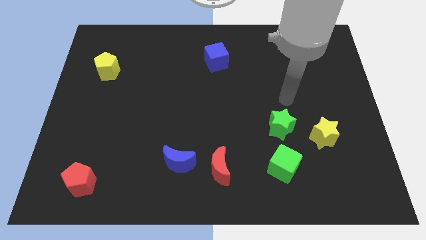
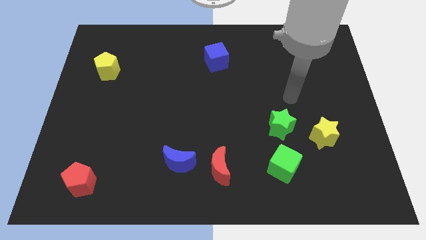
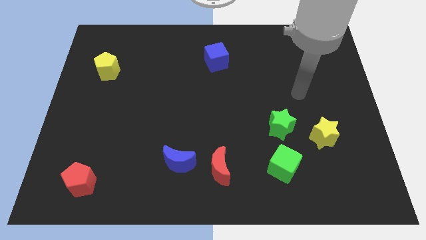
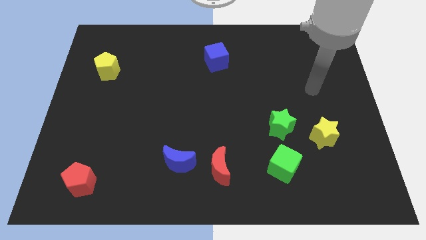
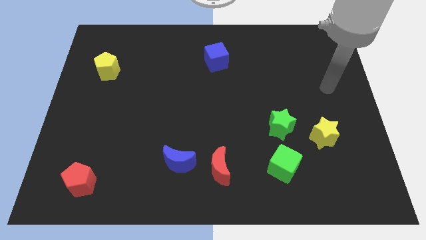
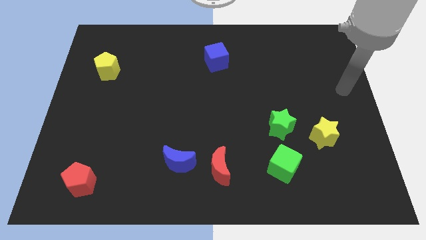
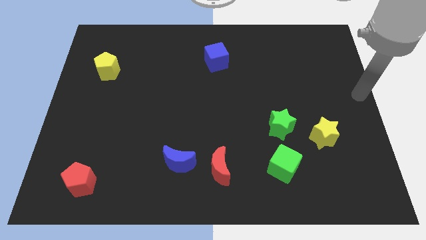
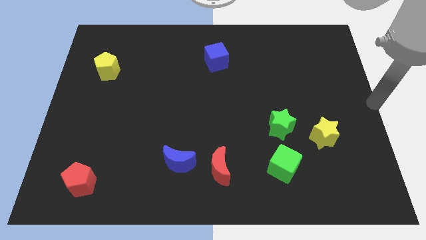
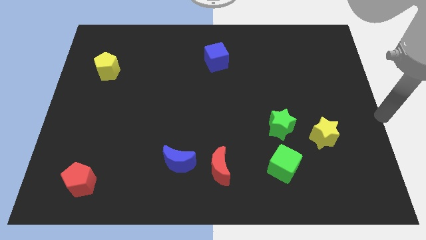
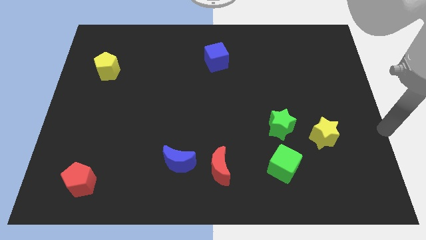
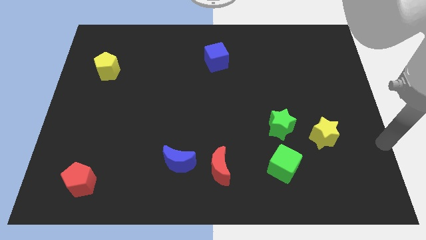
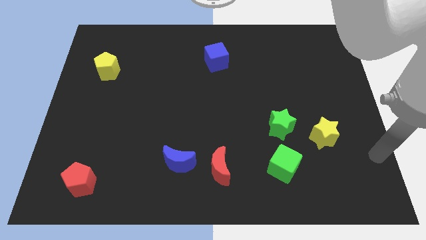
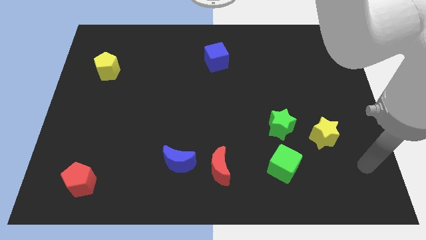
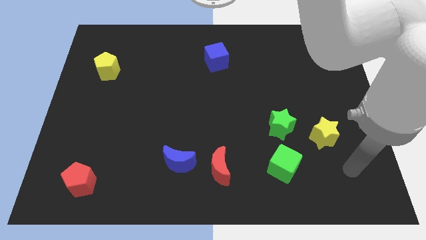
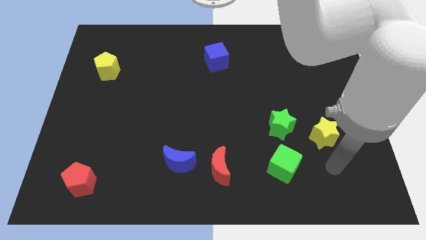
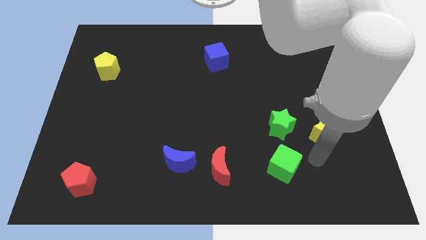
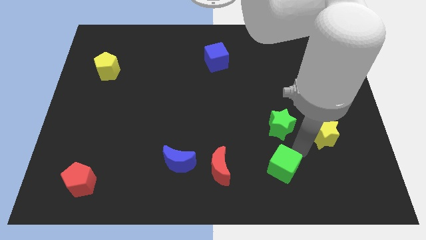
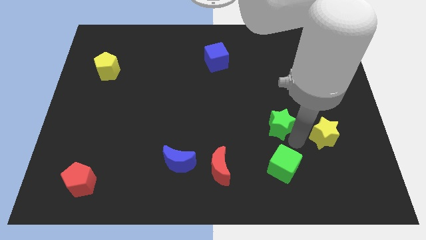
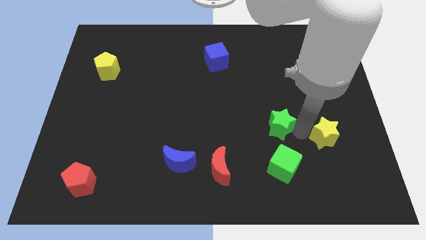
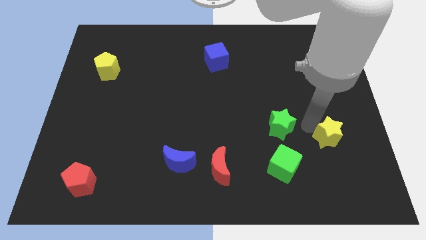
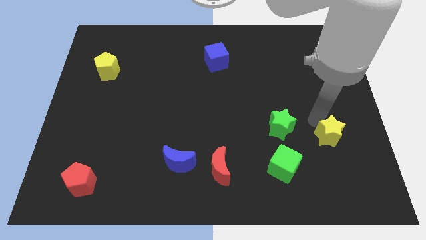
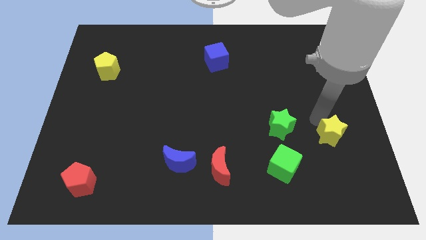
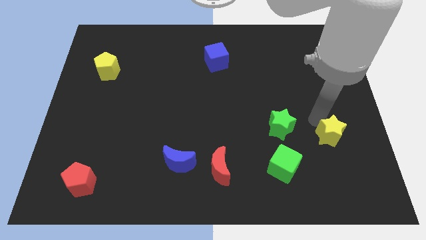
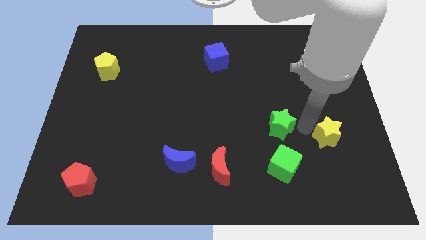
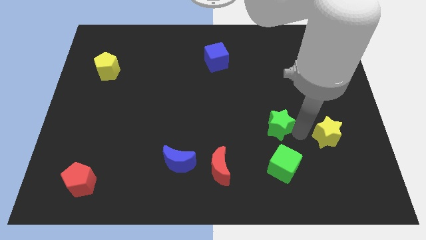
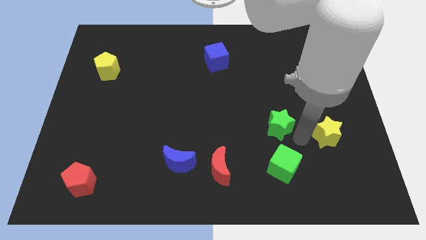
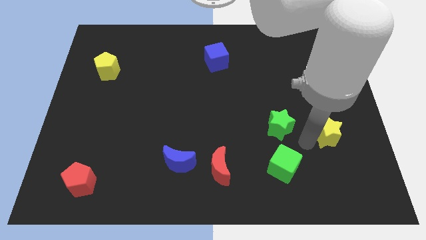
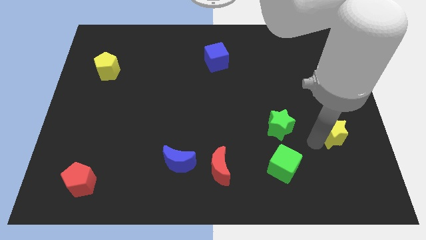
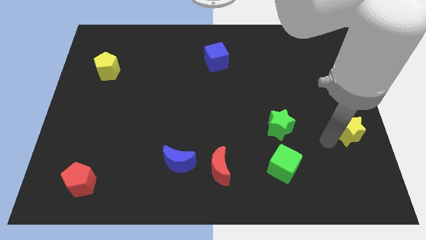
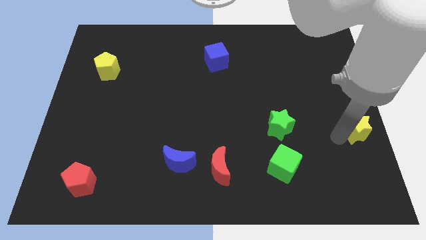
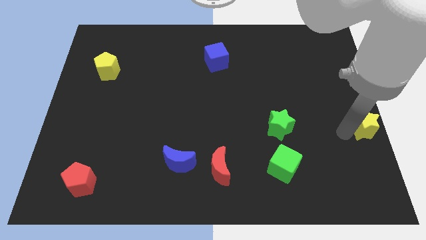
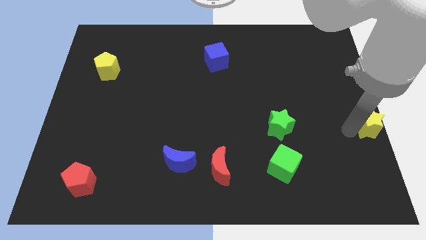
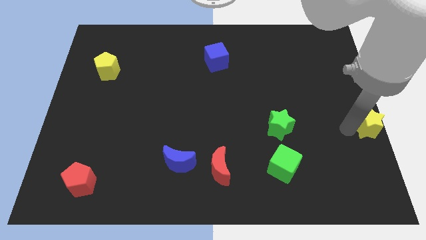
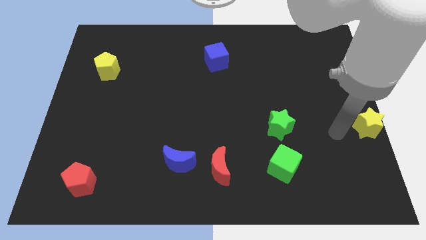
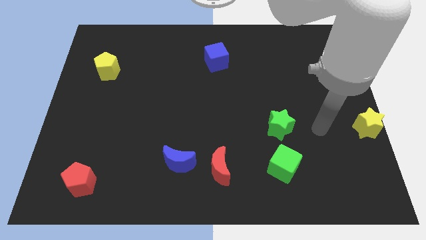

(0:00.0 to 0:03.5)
slide the yellow star to the right

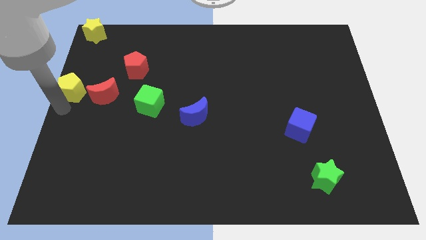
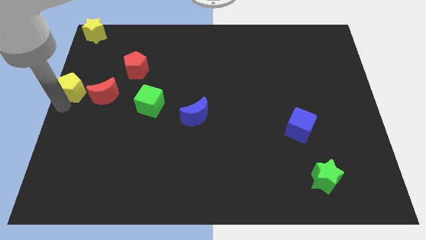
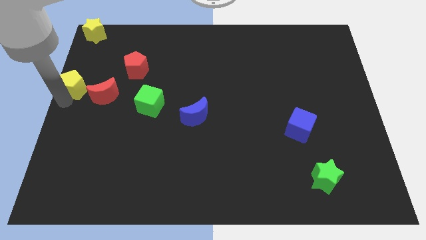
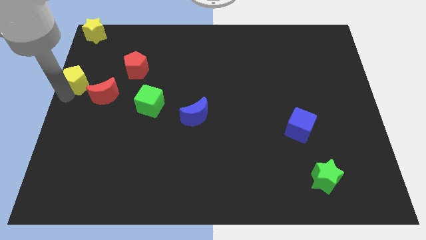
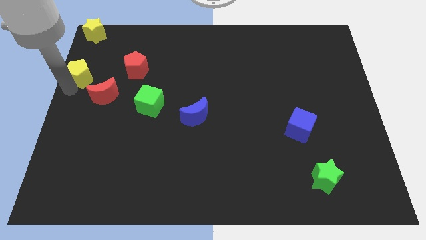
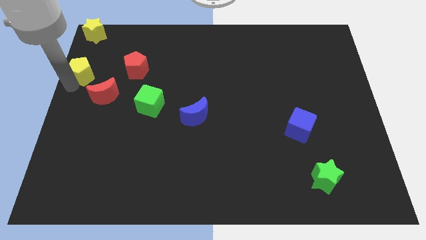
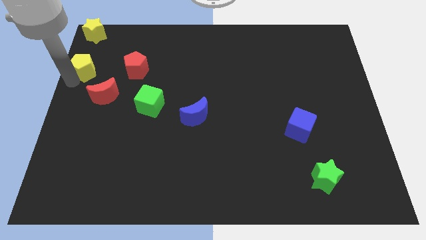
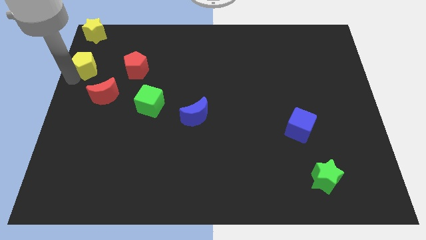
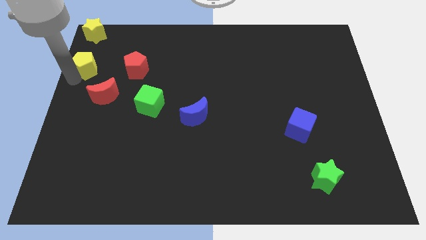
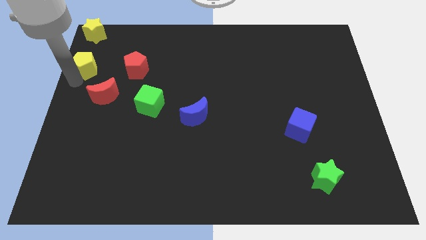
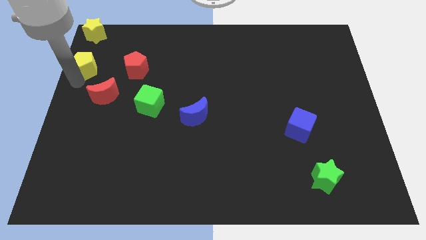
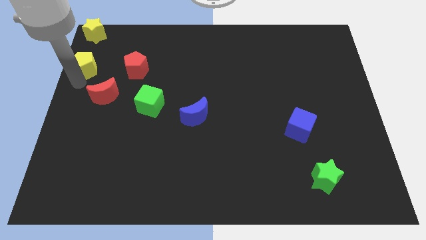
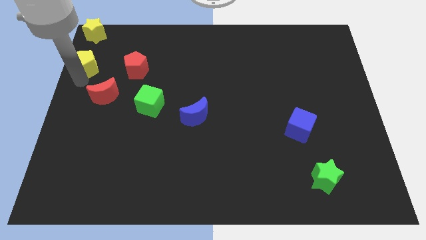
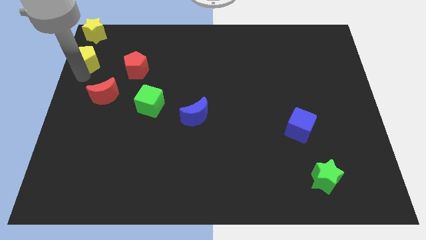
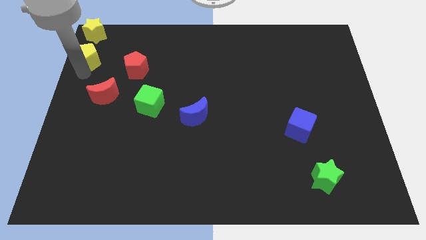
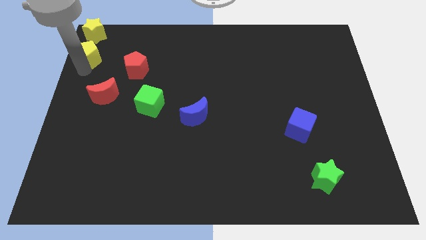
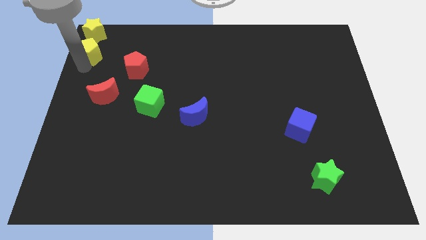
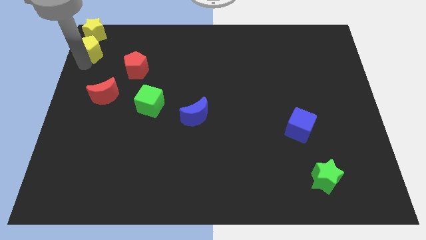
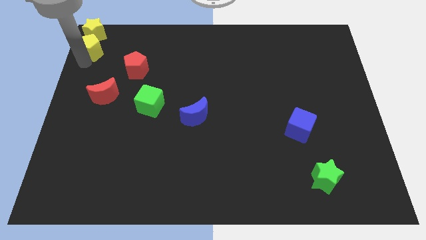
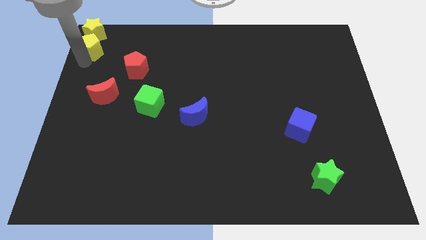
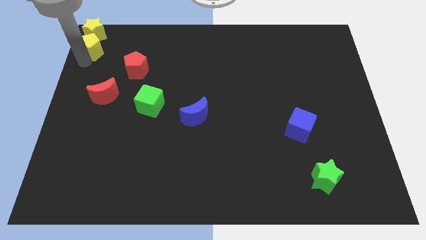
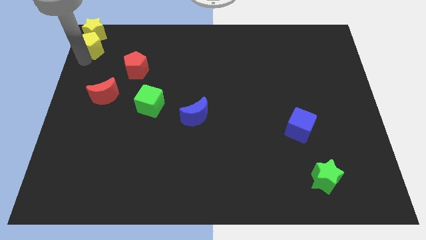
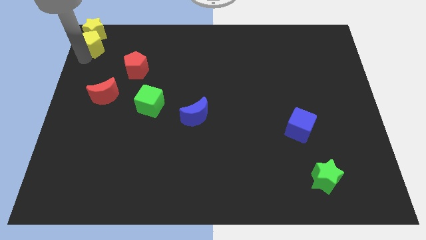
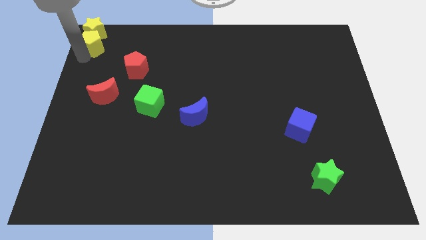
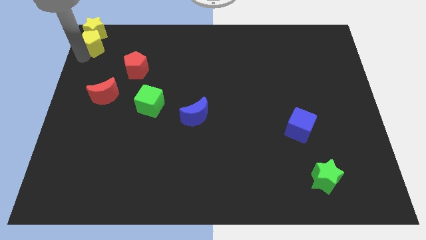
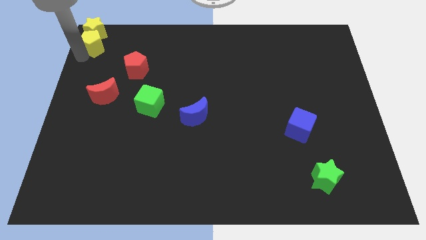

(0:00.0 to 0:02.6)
place the yellow pentagon under yellow star

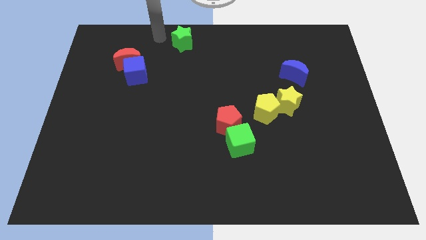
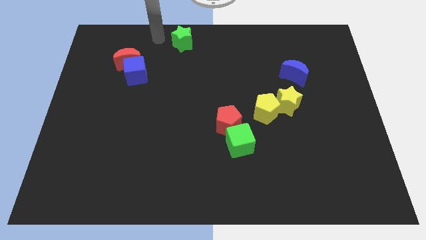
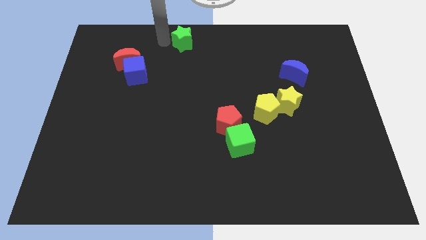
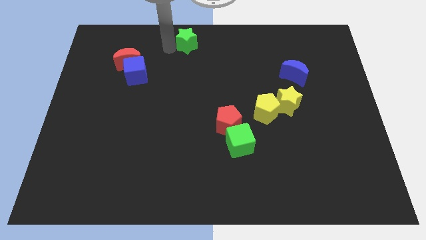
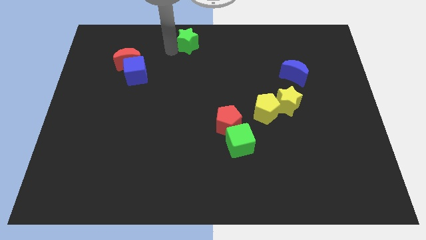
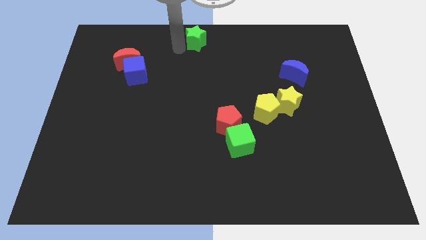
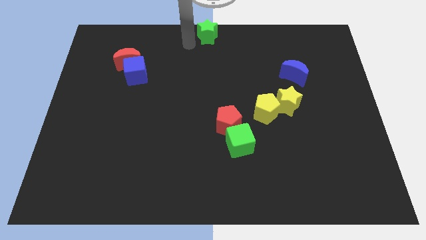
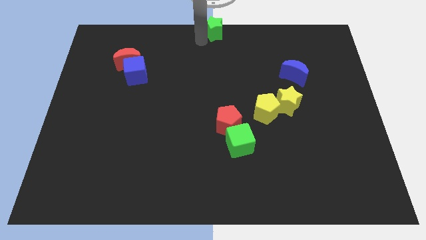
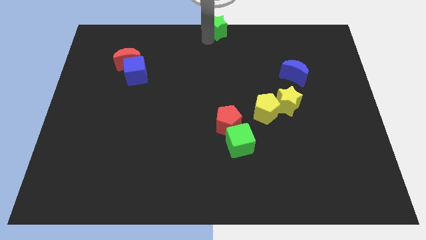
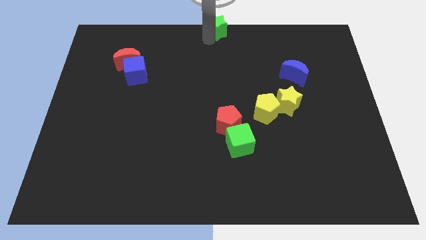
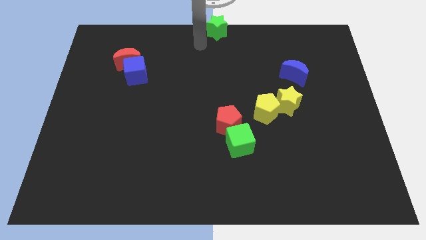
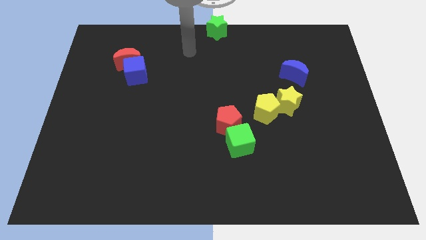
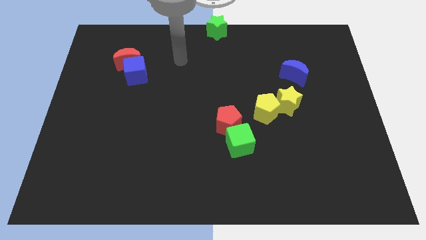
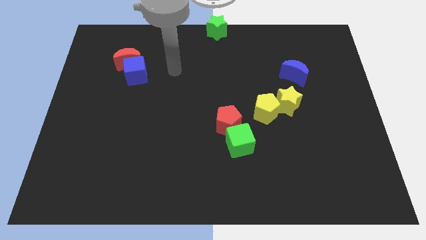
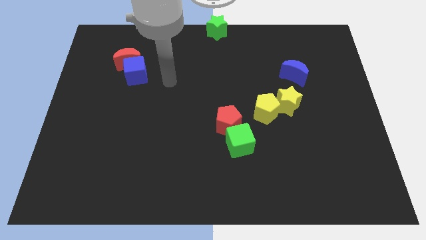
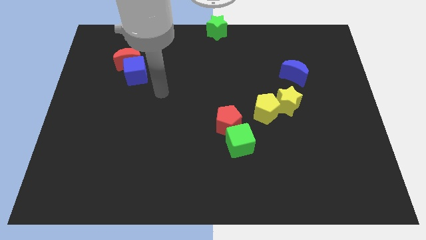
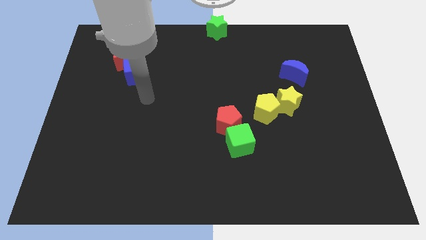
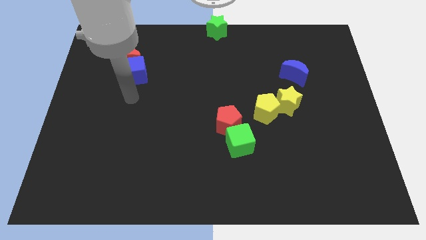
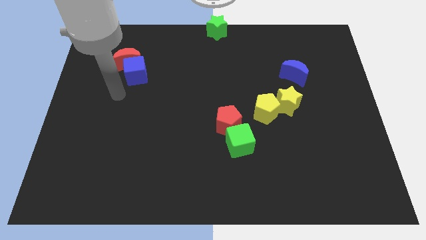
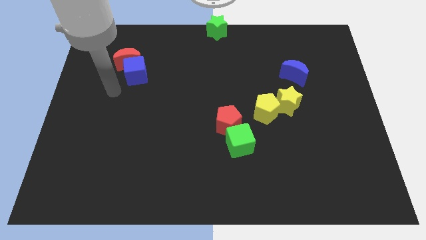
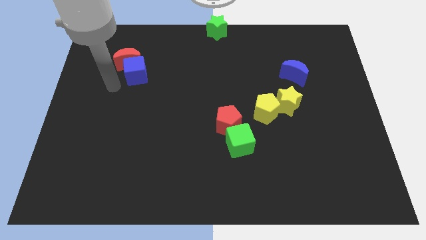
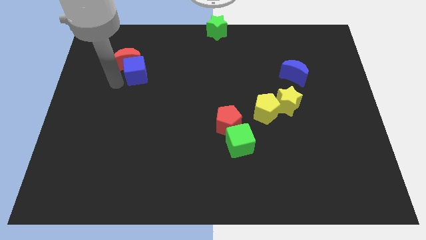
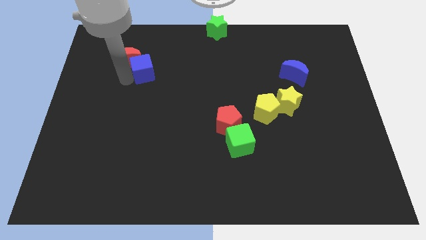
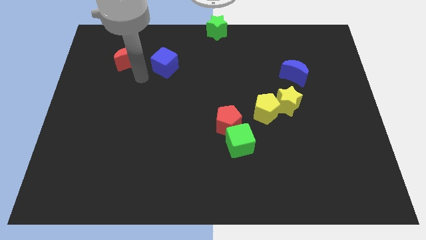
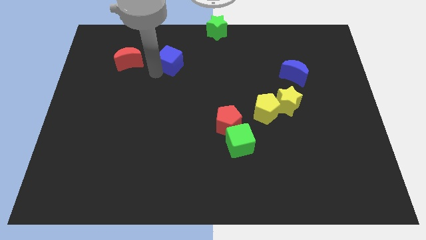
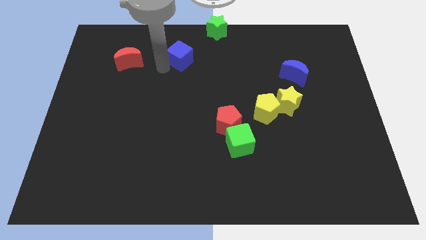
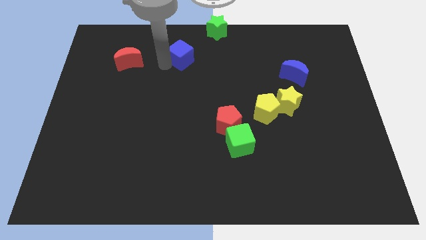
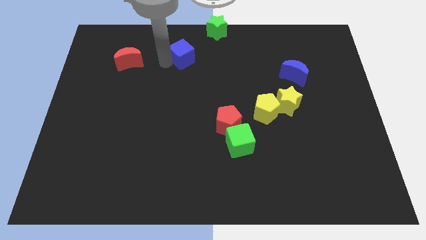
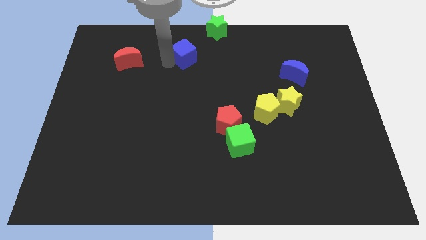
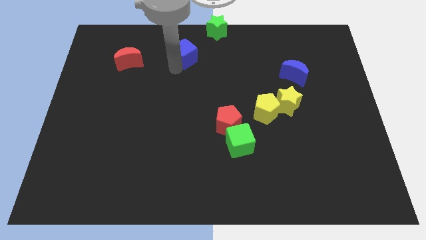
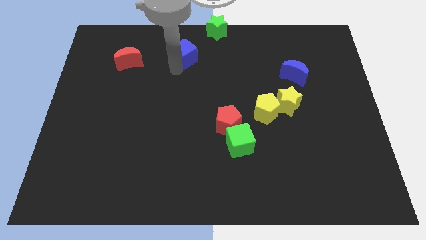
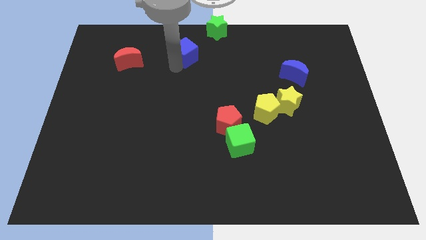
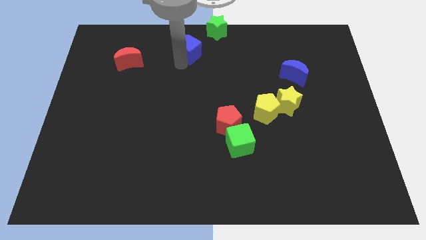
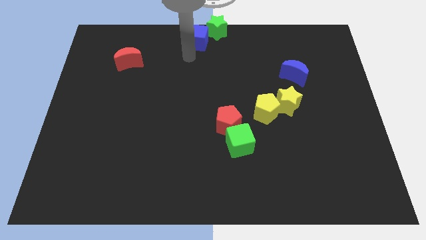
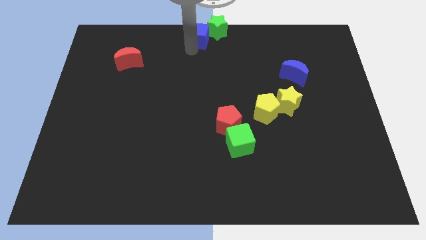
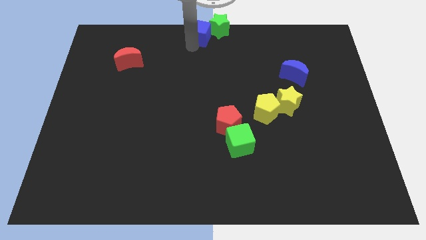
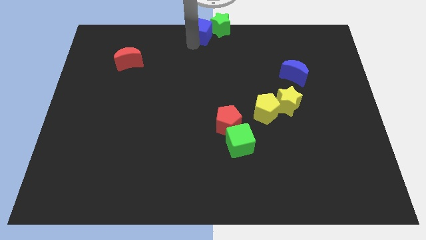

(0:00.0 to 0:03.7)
move blue cube into green star
